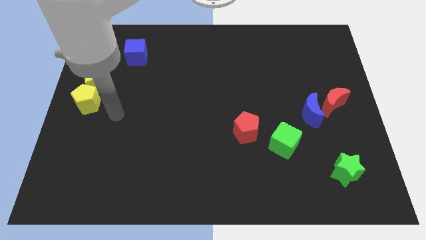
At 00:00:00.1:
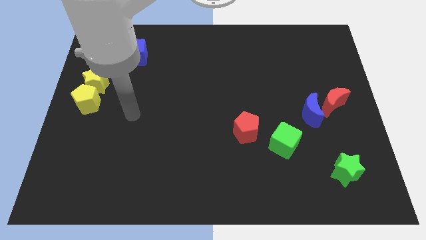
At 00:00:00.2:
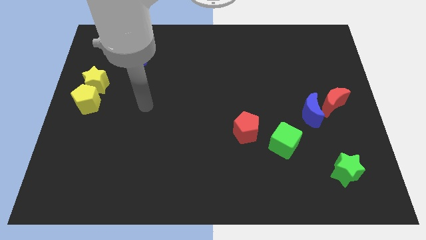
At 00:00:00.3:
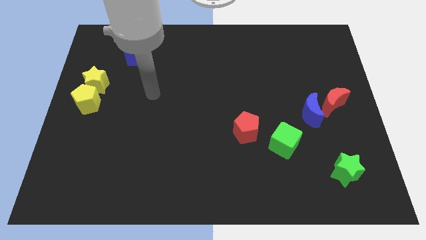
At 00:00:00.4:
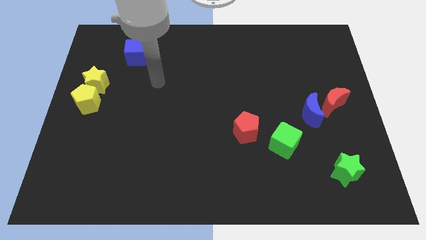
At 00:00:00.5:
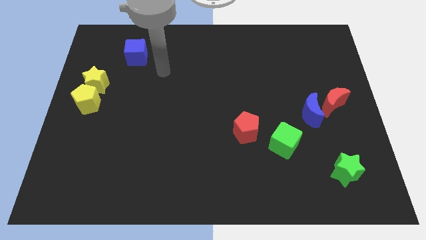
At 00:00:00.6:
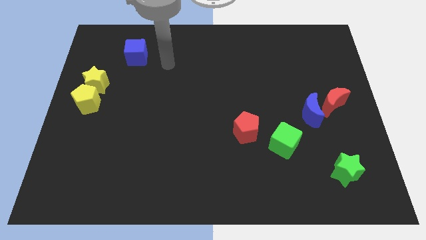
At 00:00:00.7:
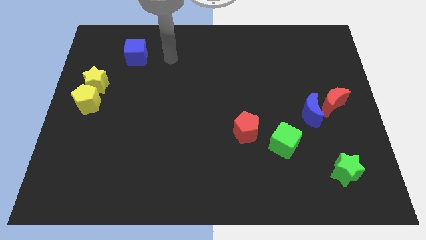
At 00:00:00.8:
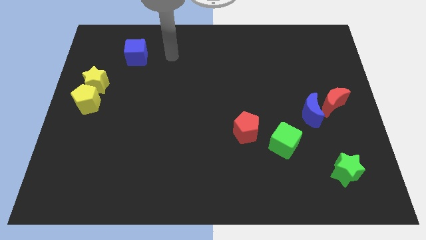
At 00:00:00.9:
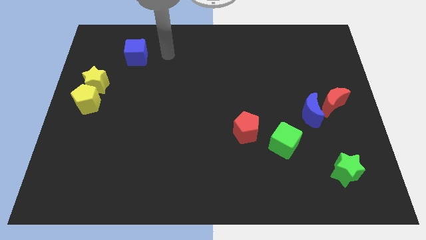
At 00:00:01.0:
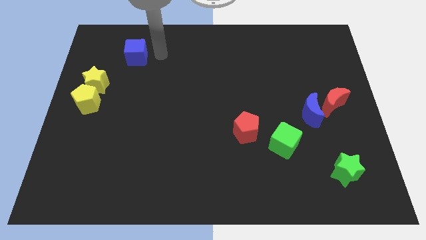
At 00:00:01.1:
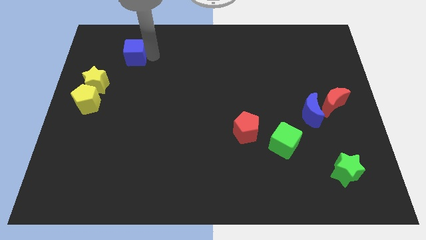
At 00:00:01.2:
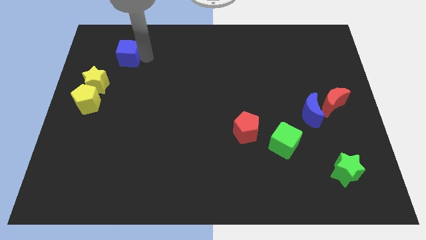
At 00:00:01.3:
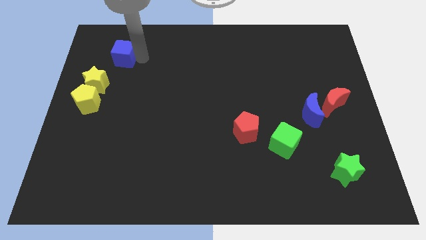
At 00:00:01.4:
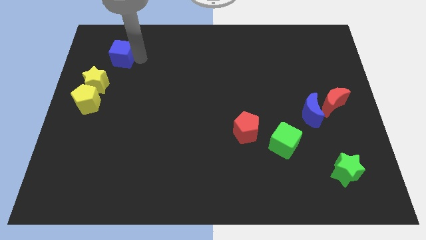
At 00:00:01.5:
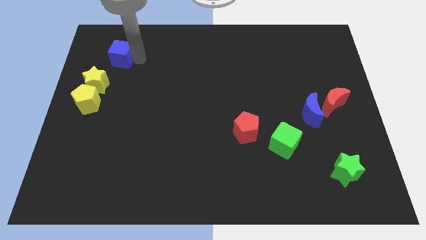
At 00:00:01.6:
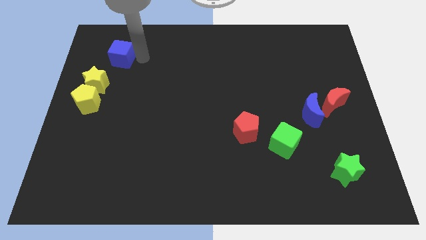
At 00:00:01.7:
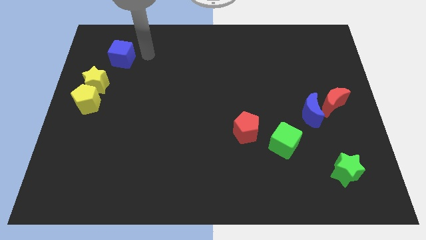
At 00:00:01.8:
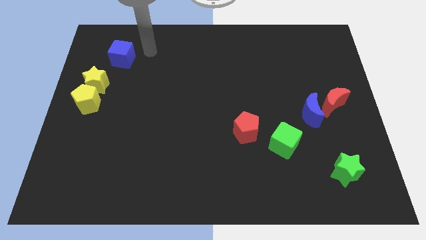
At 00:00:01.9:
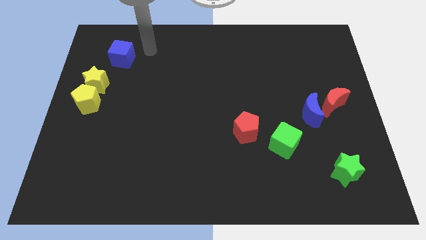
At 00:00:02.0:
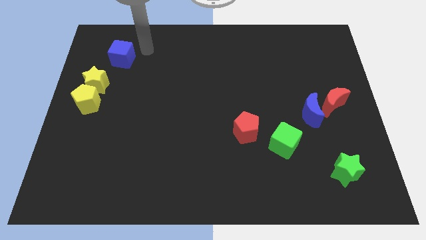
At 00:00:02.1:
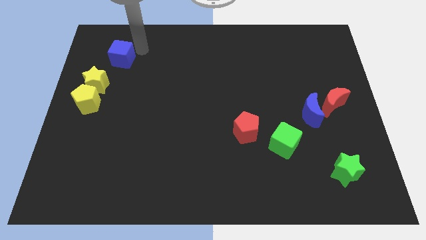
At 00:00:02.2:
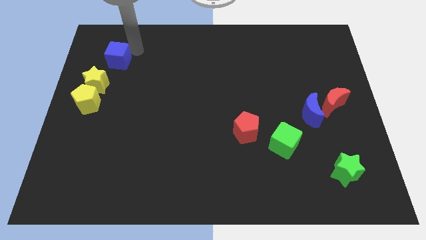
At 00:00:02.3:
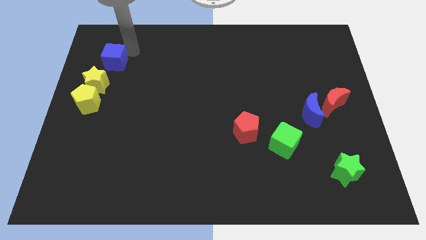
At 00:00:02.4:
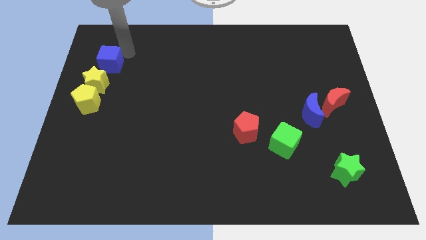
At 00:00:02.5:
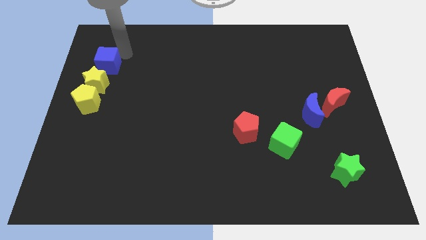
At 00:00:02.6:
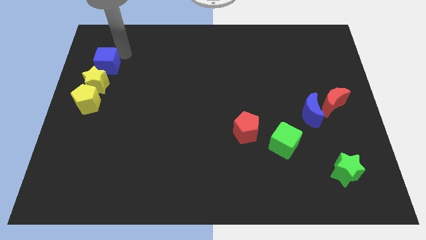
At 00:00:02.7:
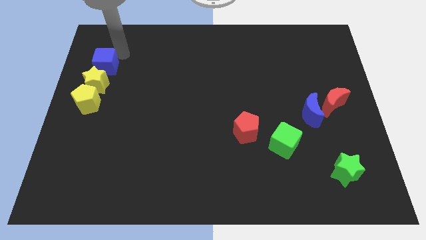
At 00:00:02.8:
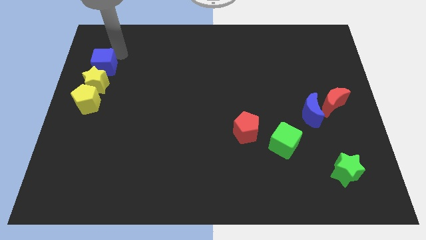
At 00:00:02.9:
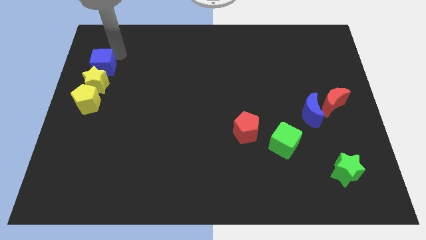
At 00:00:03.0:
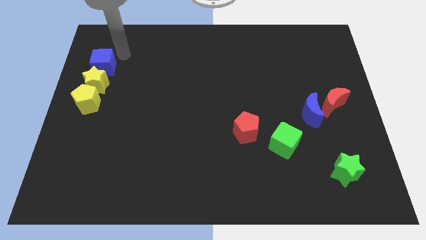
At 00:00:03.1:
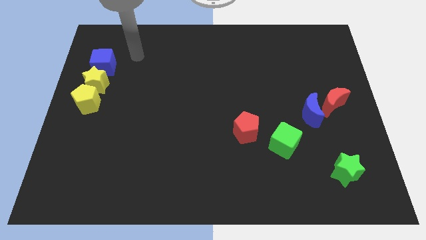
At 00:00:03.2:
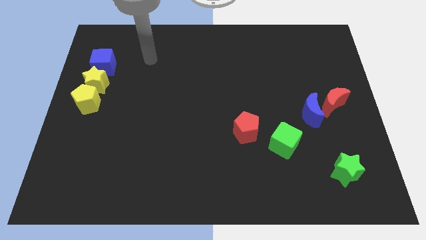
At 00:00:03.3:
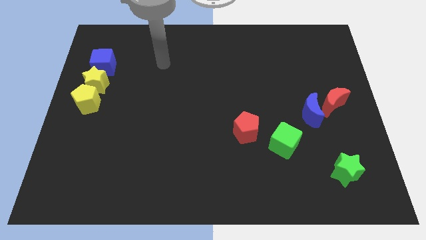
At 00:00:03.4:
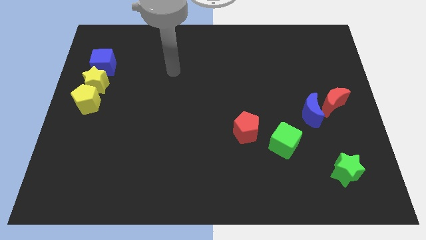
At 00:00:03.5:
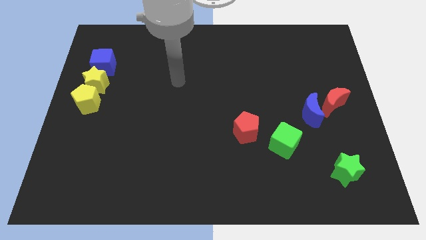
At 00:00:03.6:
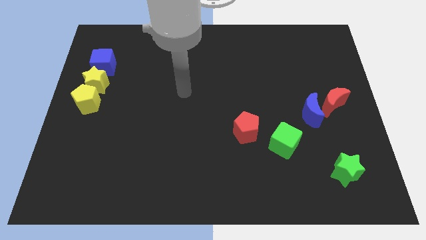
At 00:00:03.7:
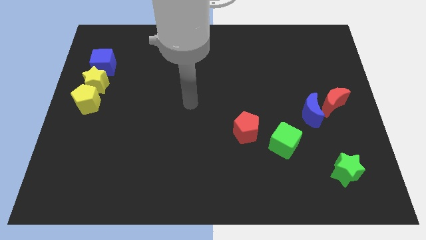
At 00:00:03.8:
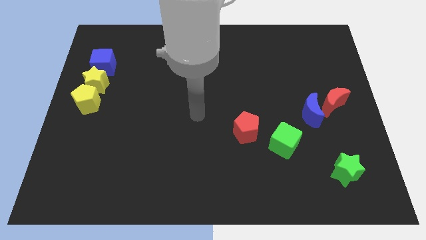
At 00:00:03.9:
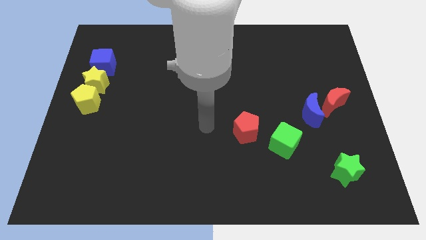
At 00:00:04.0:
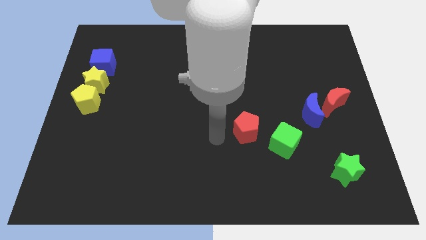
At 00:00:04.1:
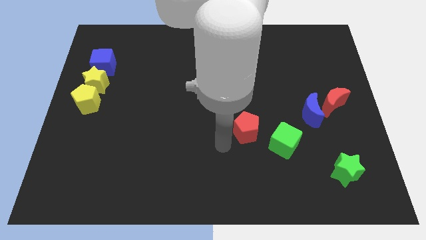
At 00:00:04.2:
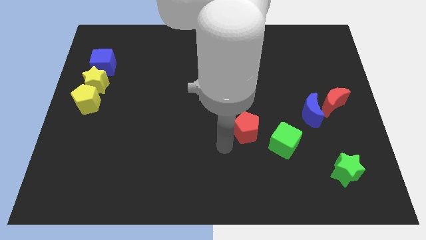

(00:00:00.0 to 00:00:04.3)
put the blue cube above the yellow star

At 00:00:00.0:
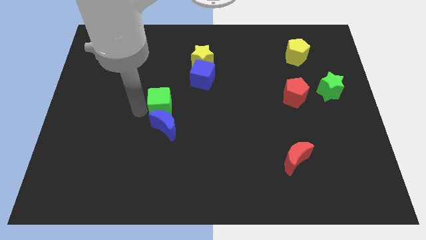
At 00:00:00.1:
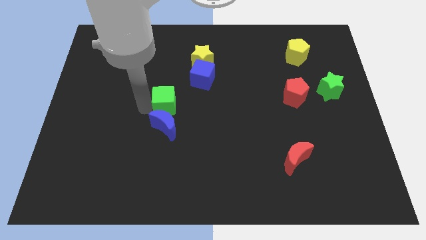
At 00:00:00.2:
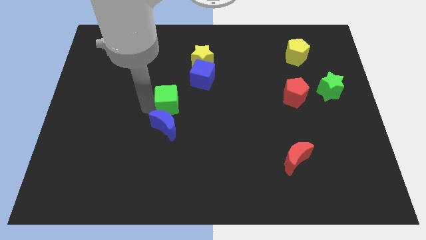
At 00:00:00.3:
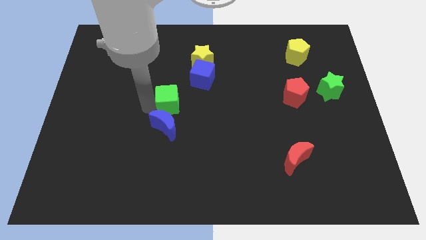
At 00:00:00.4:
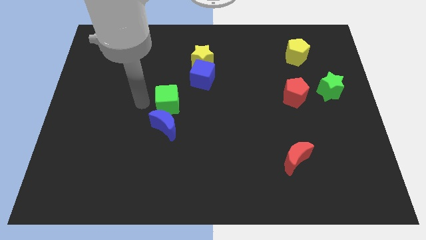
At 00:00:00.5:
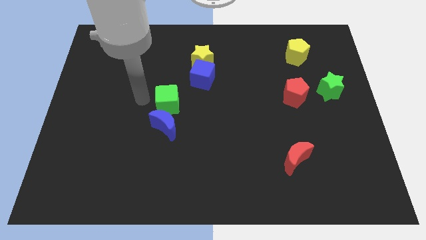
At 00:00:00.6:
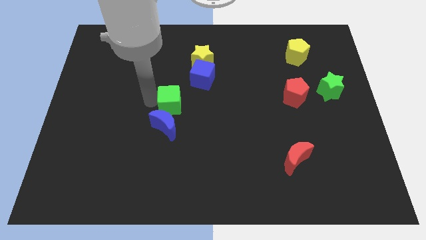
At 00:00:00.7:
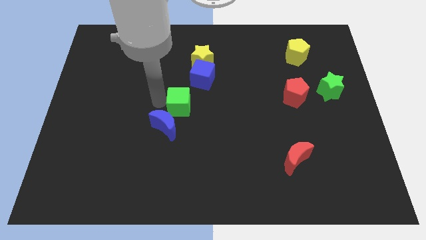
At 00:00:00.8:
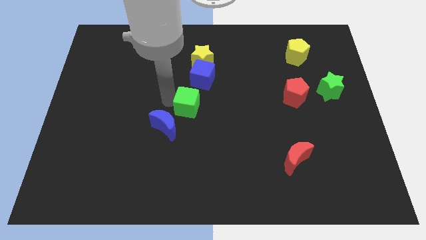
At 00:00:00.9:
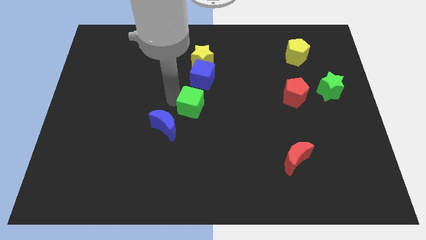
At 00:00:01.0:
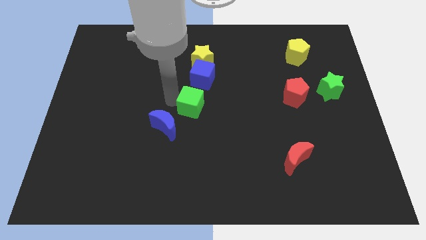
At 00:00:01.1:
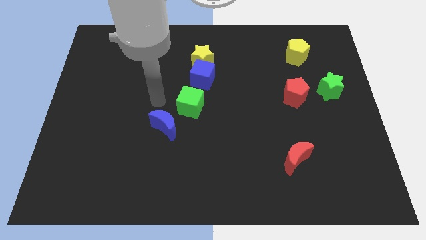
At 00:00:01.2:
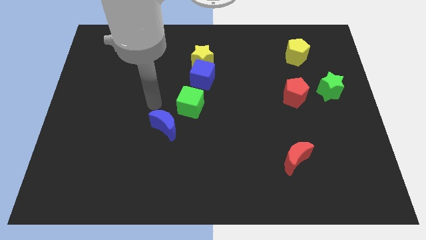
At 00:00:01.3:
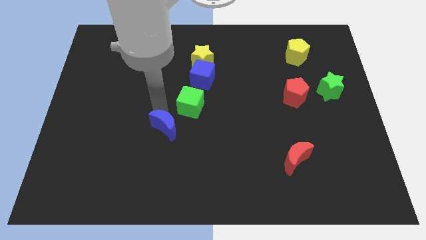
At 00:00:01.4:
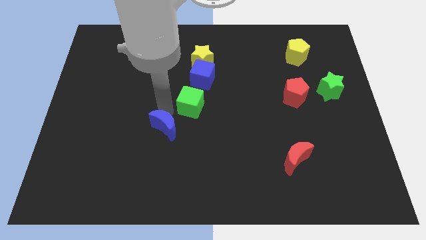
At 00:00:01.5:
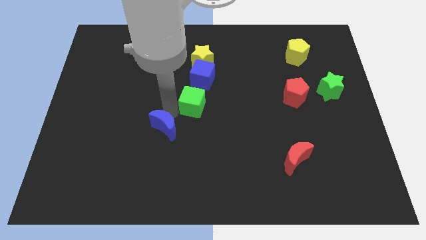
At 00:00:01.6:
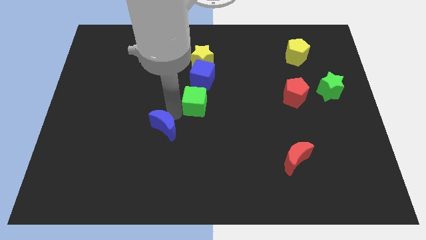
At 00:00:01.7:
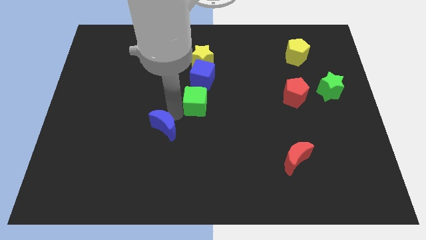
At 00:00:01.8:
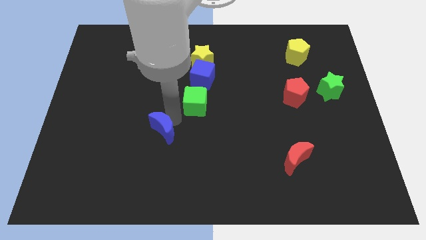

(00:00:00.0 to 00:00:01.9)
place green cube to the bottom of the blue cube

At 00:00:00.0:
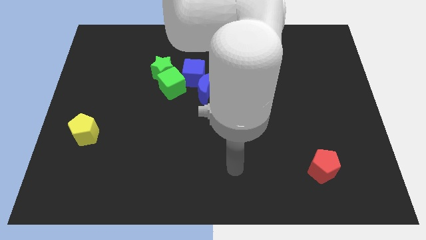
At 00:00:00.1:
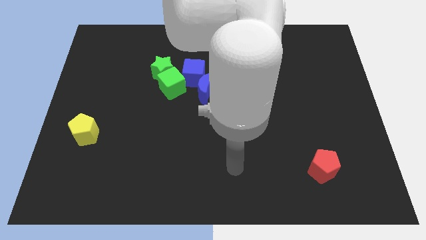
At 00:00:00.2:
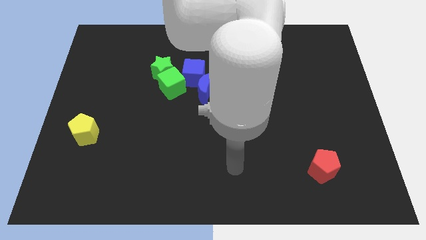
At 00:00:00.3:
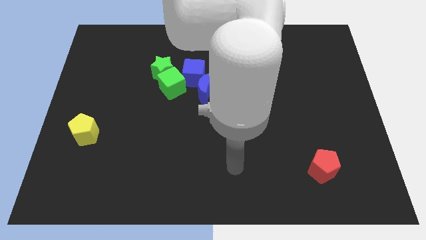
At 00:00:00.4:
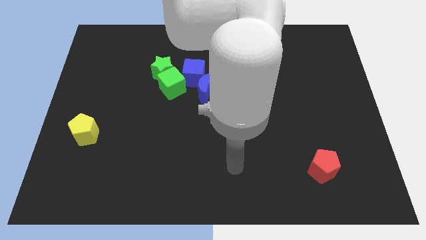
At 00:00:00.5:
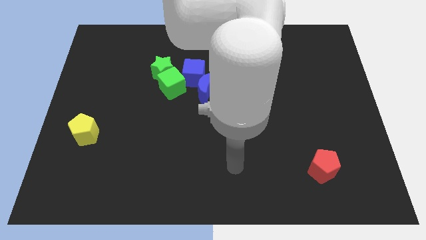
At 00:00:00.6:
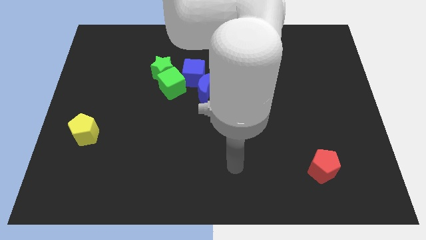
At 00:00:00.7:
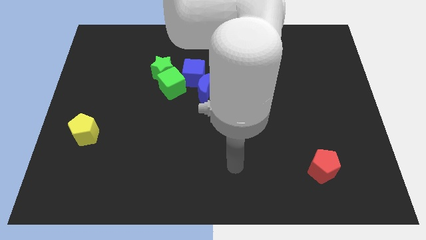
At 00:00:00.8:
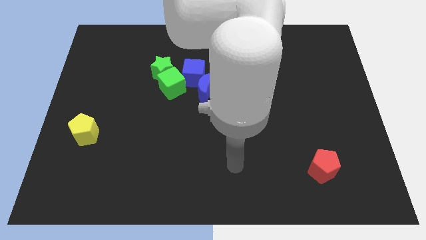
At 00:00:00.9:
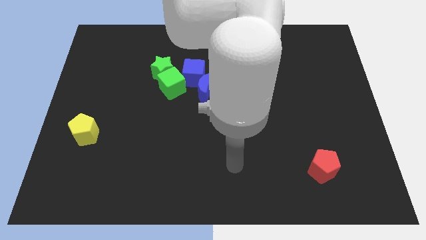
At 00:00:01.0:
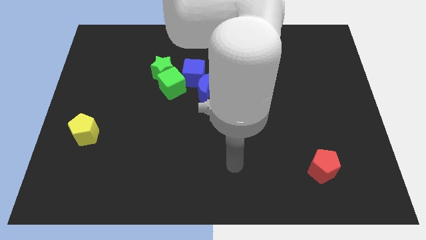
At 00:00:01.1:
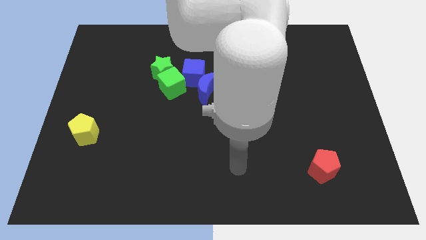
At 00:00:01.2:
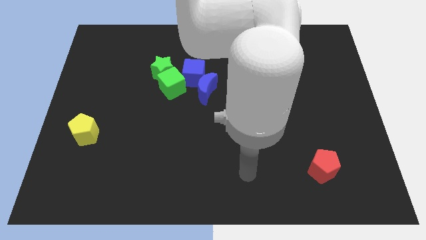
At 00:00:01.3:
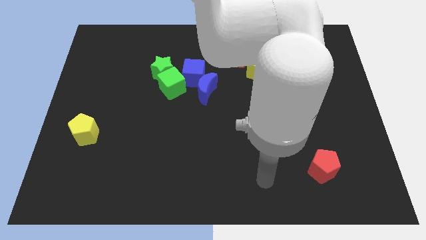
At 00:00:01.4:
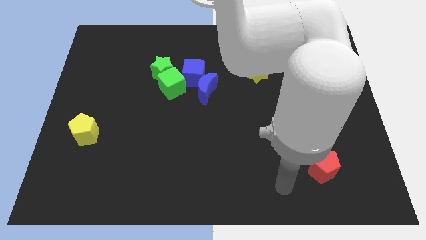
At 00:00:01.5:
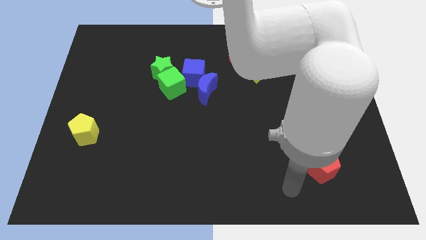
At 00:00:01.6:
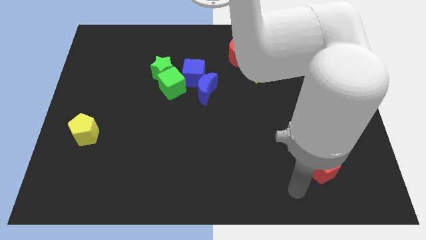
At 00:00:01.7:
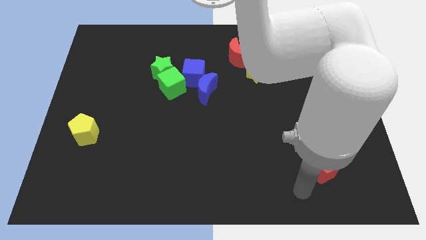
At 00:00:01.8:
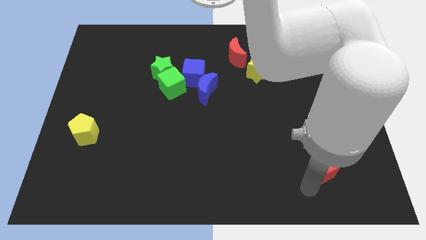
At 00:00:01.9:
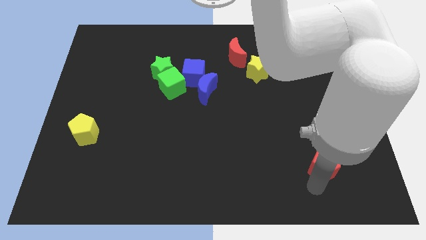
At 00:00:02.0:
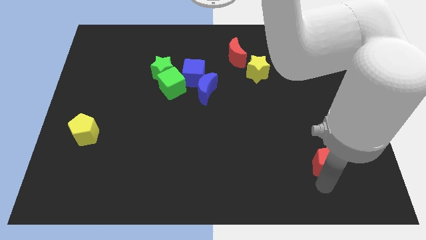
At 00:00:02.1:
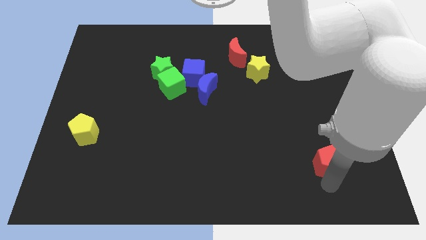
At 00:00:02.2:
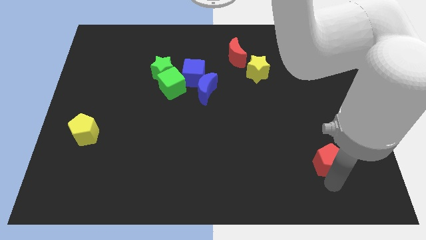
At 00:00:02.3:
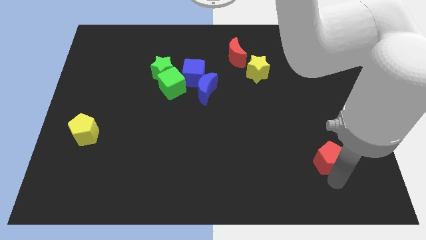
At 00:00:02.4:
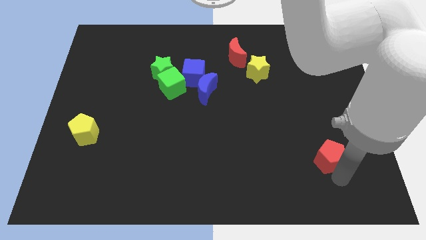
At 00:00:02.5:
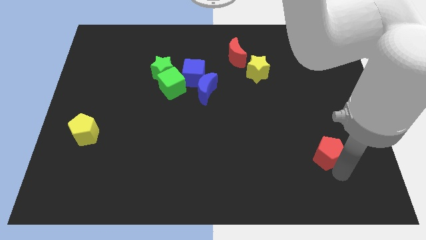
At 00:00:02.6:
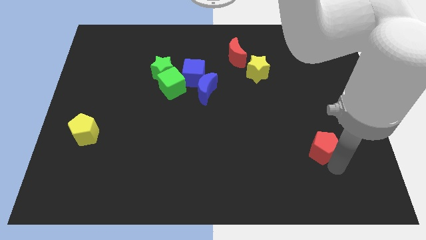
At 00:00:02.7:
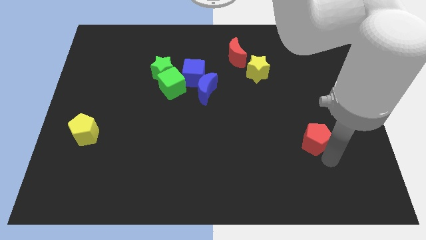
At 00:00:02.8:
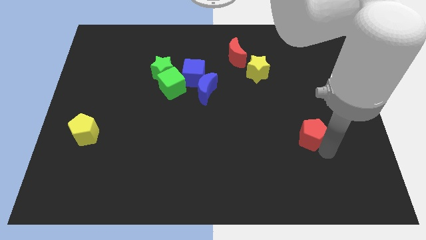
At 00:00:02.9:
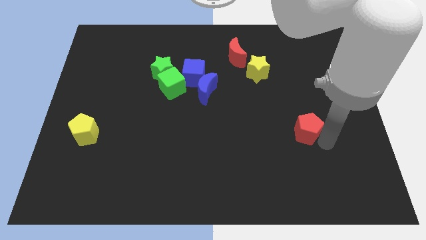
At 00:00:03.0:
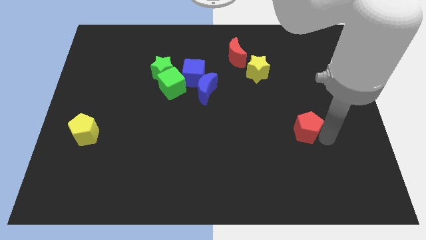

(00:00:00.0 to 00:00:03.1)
slide red pentagon upwards parallel to yellow pentagon
